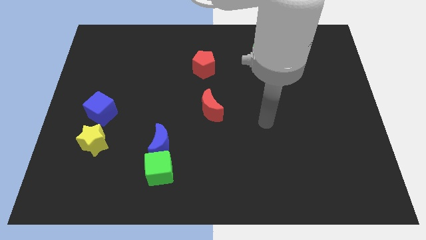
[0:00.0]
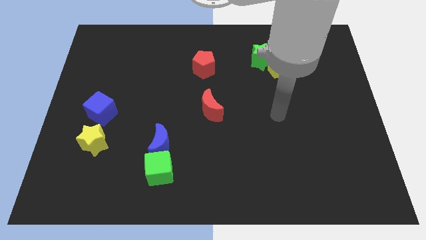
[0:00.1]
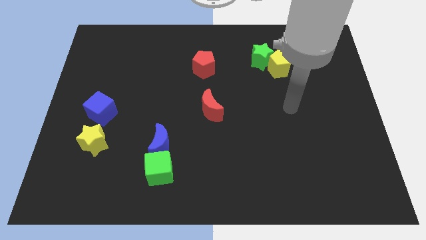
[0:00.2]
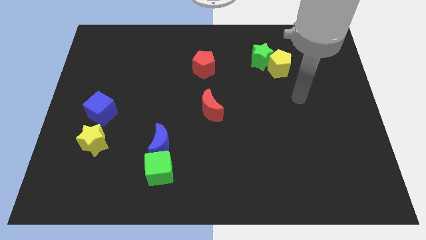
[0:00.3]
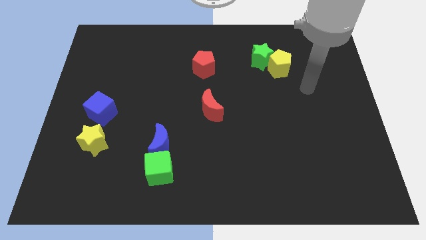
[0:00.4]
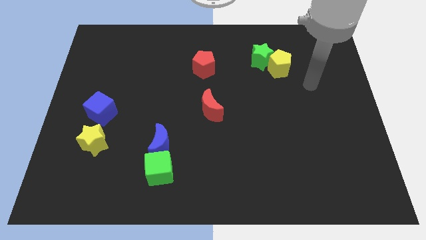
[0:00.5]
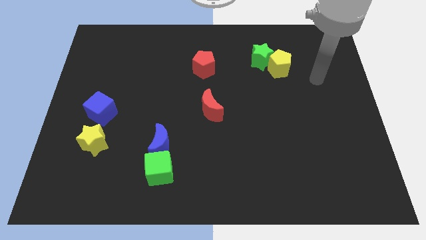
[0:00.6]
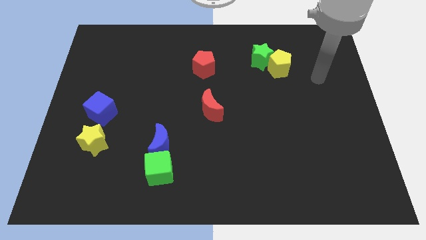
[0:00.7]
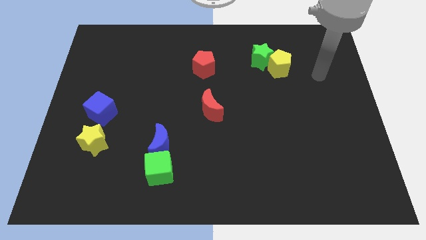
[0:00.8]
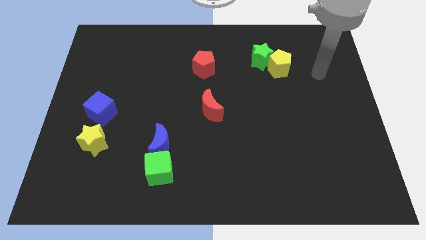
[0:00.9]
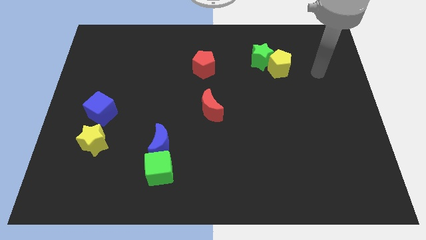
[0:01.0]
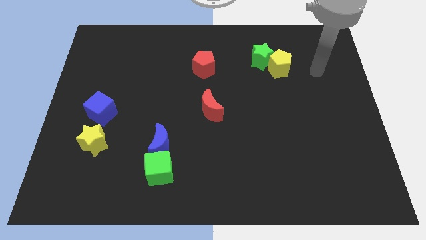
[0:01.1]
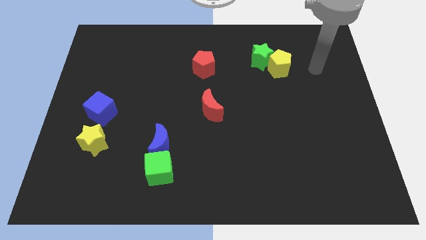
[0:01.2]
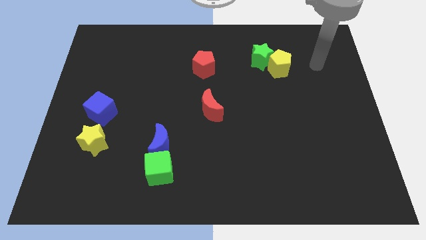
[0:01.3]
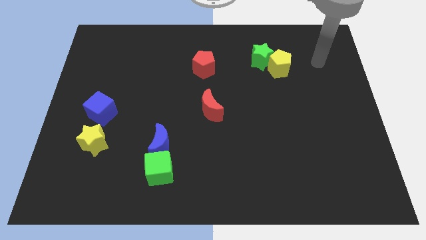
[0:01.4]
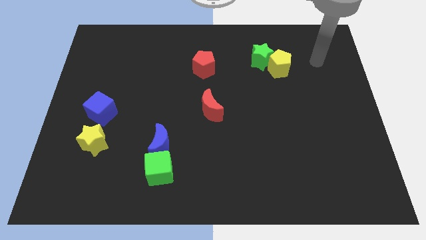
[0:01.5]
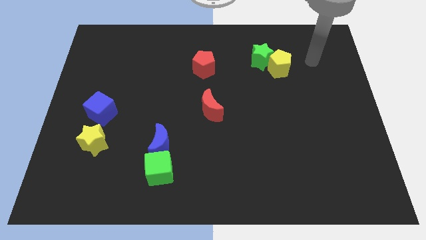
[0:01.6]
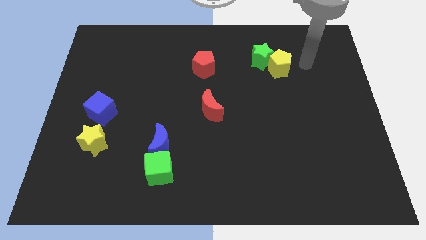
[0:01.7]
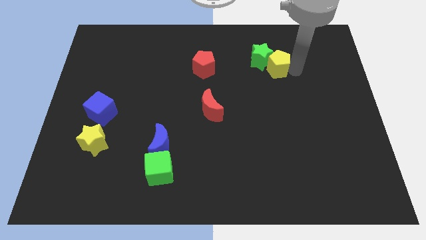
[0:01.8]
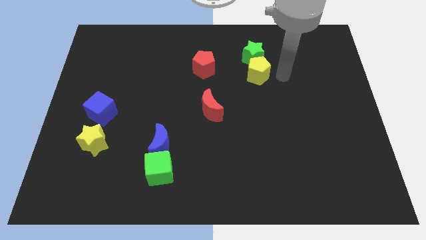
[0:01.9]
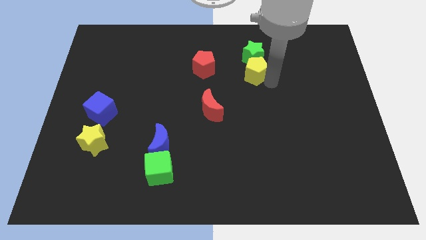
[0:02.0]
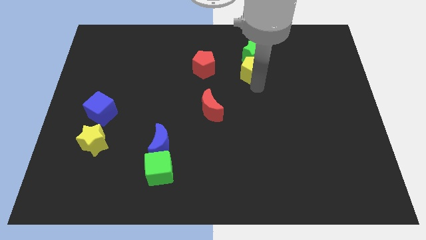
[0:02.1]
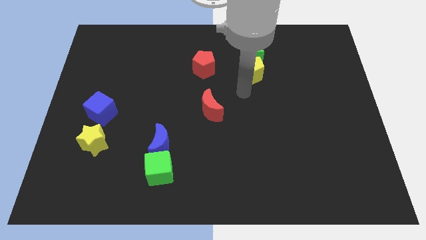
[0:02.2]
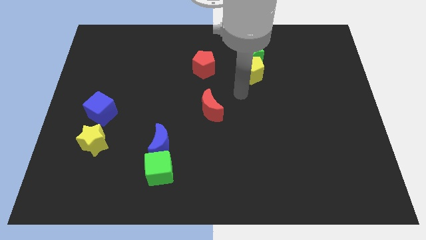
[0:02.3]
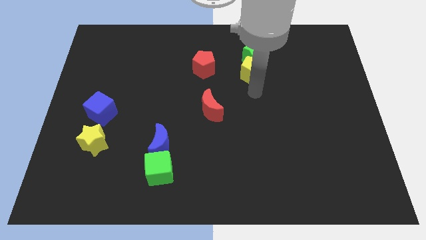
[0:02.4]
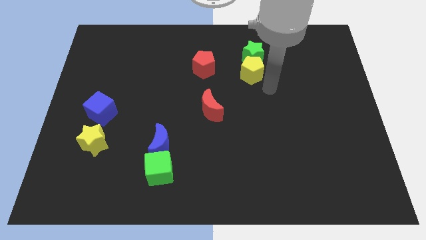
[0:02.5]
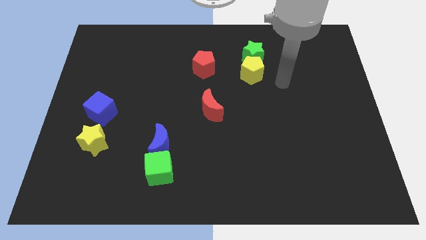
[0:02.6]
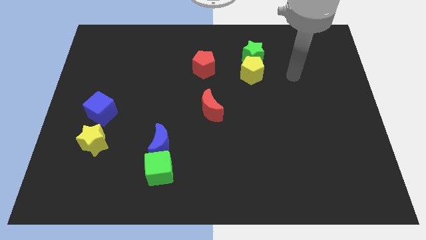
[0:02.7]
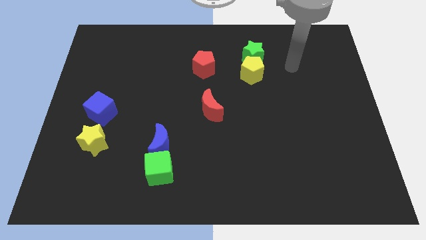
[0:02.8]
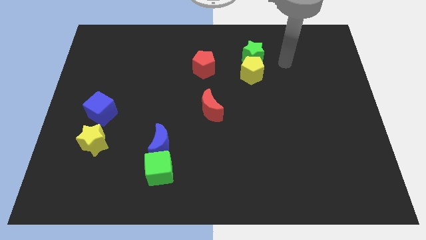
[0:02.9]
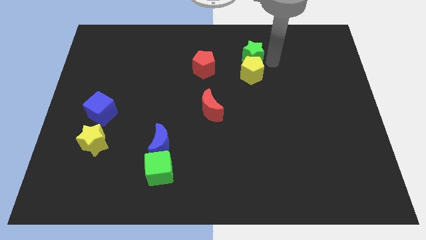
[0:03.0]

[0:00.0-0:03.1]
move the yellow pentagon below the green star

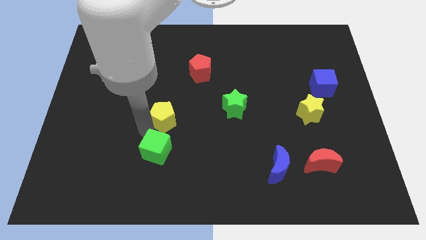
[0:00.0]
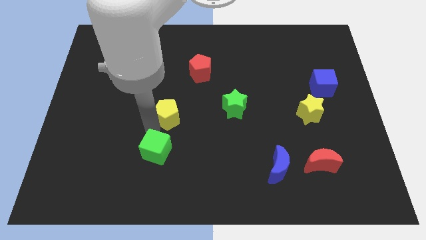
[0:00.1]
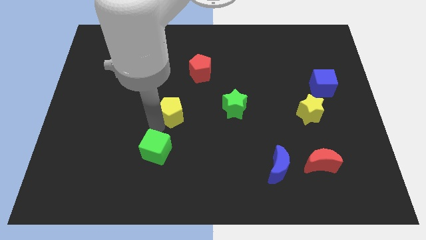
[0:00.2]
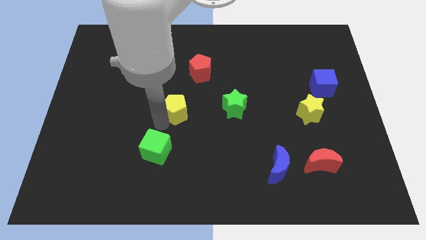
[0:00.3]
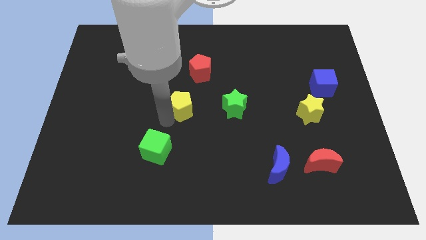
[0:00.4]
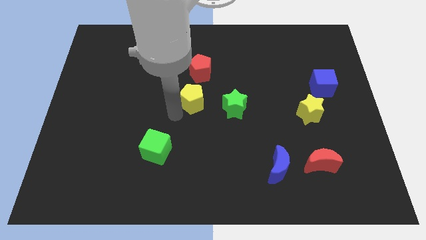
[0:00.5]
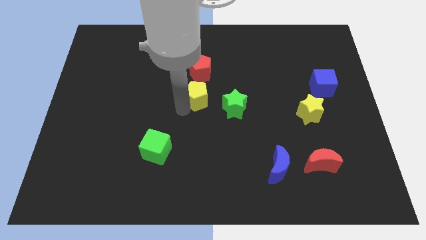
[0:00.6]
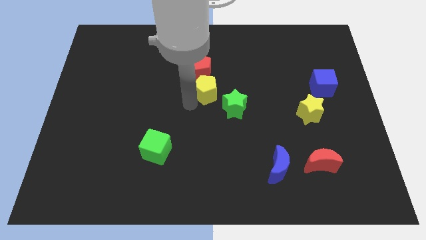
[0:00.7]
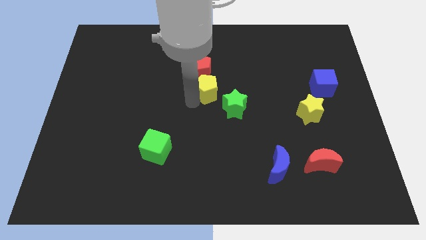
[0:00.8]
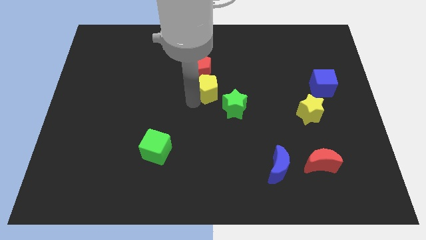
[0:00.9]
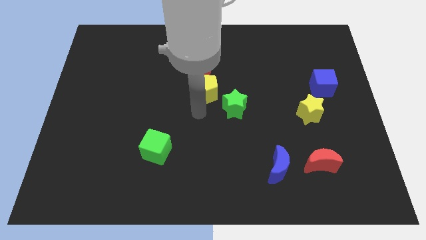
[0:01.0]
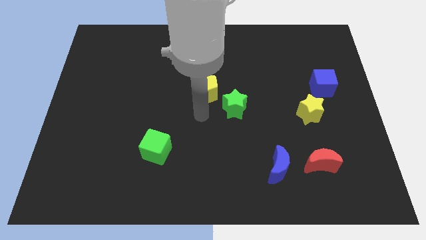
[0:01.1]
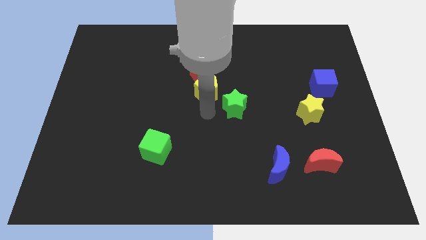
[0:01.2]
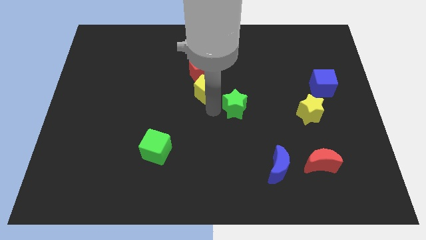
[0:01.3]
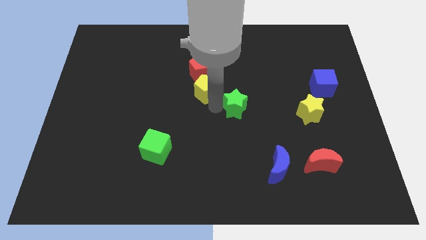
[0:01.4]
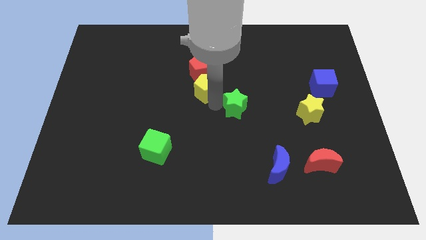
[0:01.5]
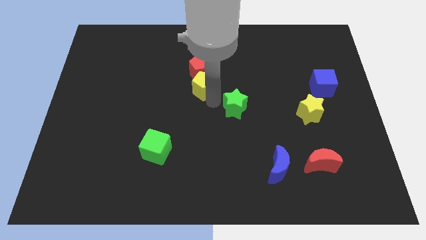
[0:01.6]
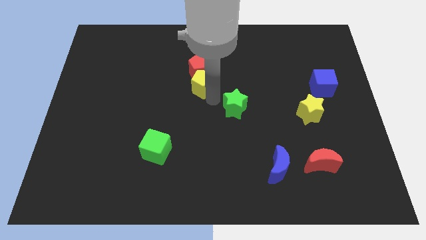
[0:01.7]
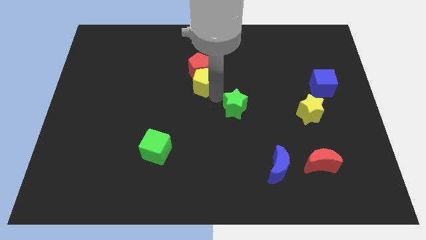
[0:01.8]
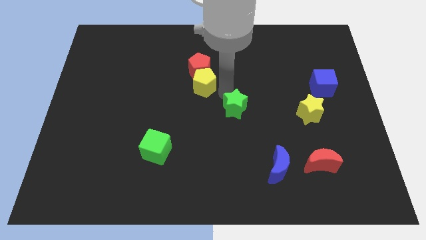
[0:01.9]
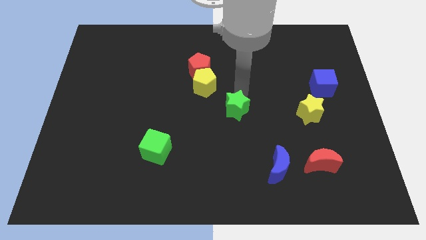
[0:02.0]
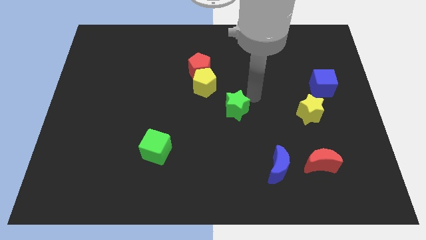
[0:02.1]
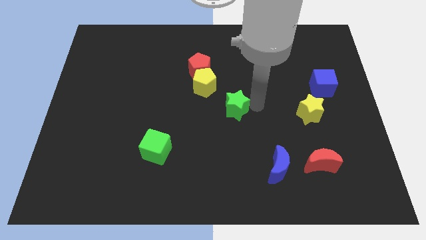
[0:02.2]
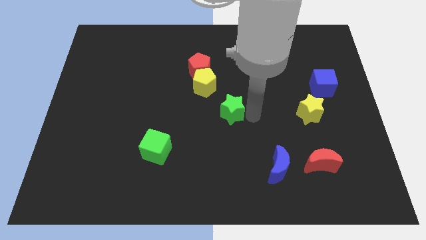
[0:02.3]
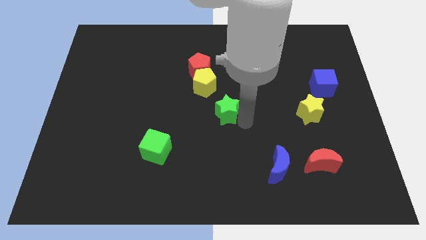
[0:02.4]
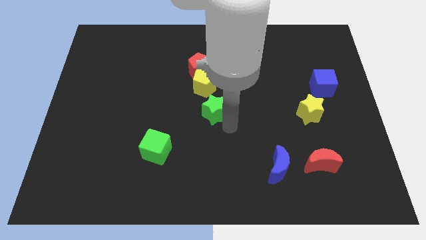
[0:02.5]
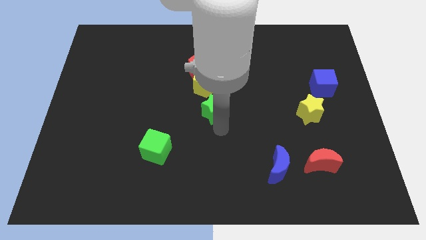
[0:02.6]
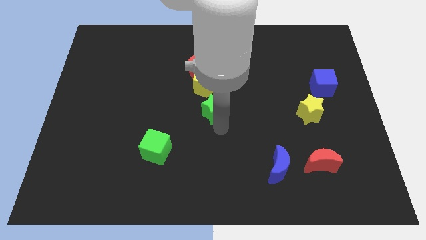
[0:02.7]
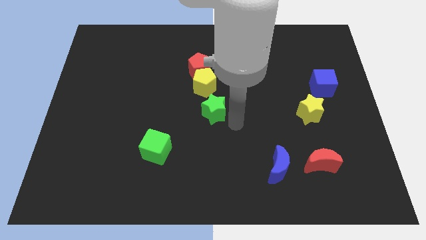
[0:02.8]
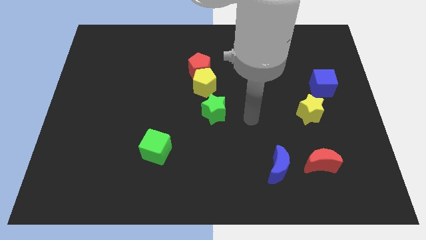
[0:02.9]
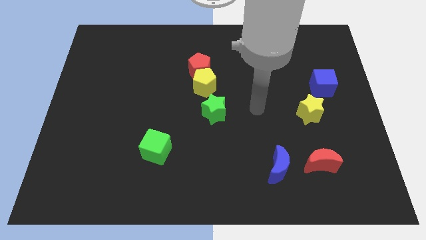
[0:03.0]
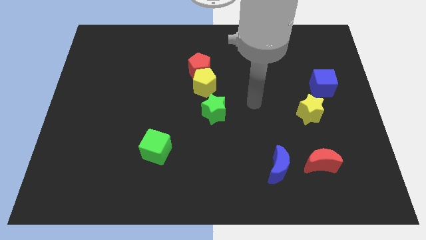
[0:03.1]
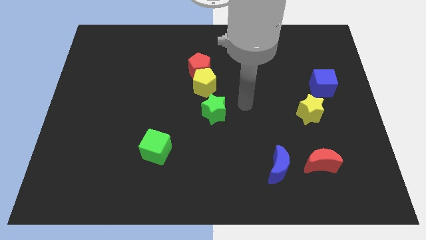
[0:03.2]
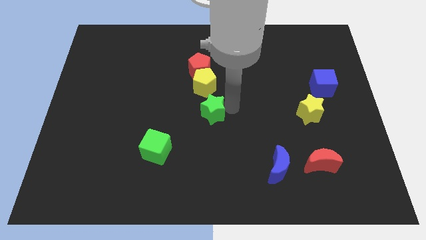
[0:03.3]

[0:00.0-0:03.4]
slide the yellow pentagon and green start diagonally to the bottom right side of the red pentagon

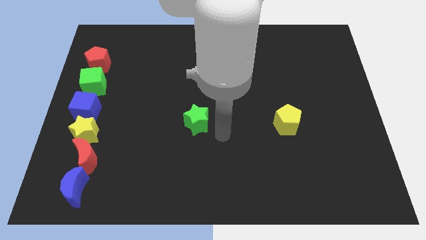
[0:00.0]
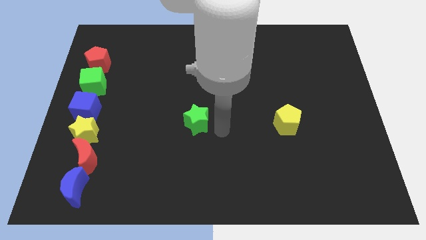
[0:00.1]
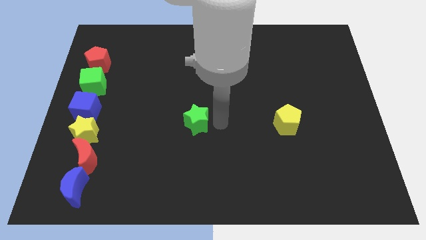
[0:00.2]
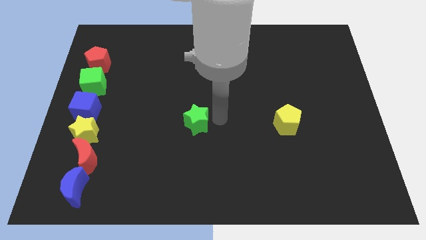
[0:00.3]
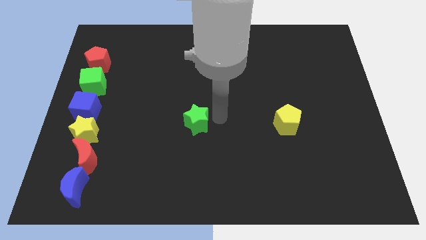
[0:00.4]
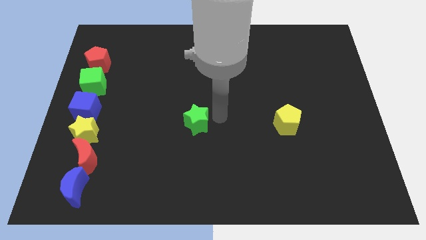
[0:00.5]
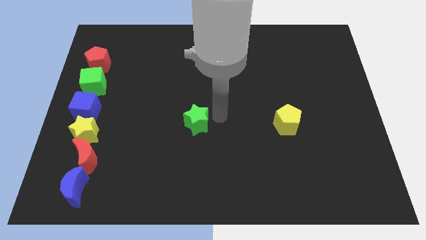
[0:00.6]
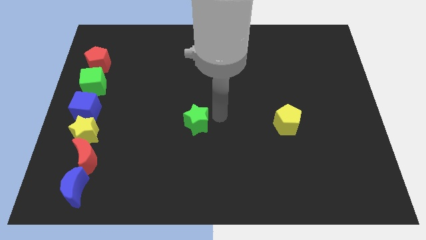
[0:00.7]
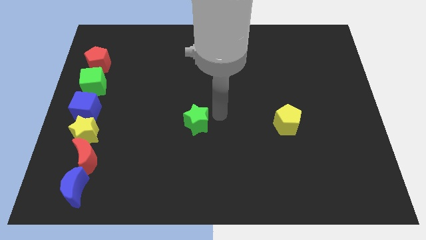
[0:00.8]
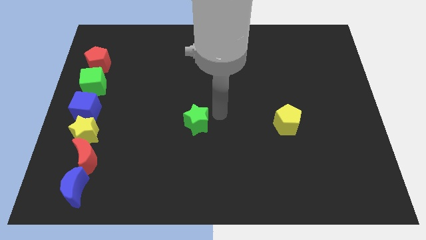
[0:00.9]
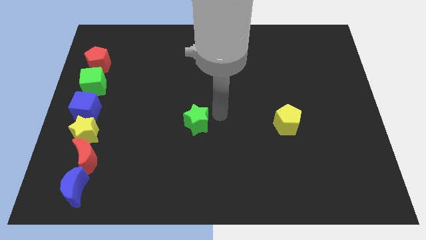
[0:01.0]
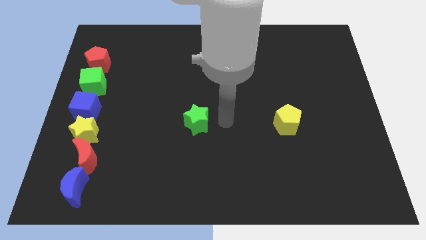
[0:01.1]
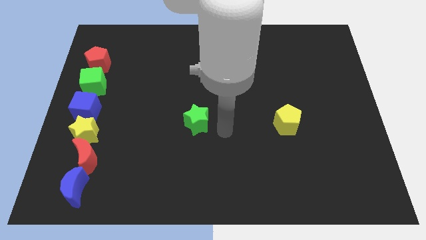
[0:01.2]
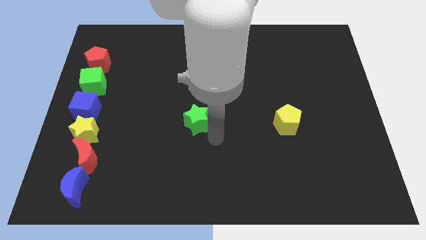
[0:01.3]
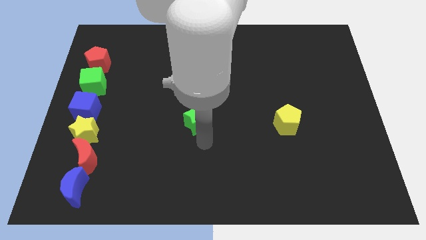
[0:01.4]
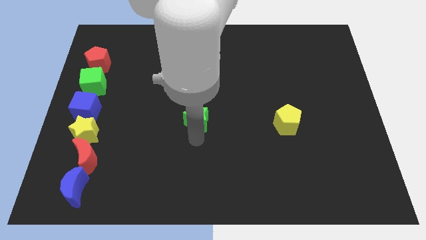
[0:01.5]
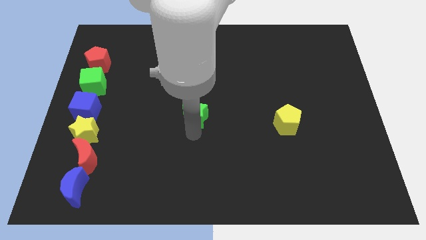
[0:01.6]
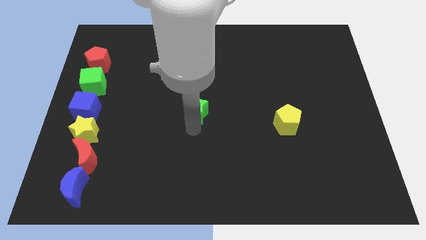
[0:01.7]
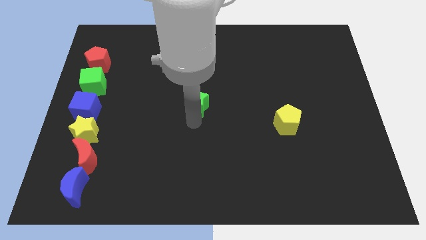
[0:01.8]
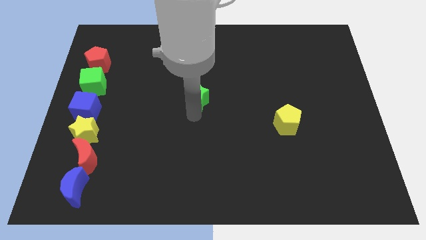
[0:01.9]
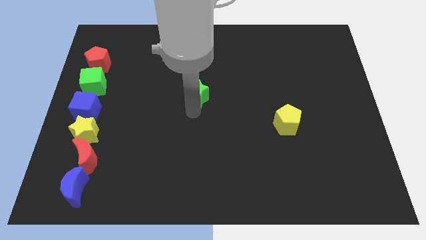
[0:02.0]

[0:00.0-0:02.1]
push the green star to the center of the board

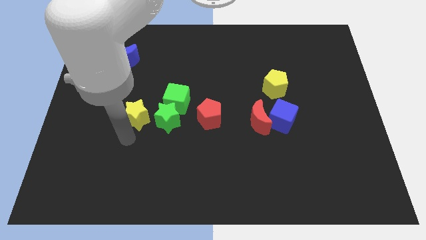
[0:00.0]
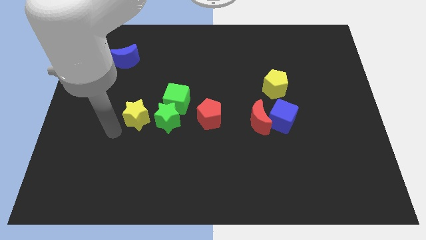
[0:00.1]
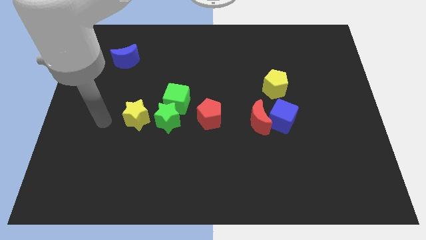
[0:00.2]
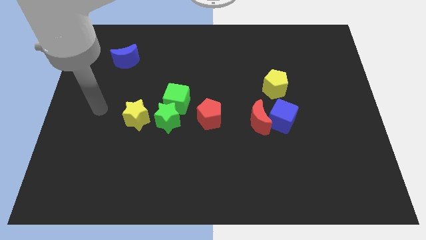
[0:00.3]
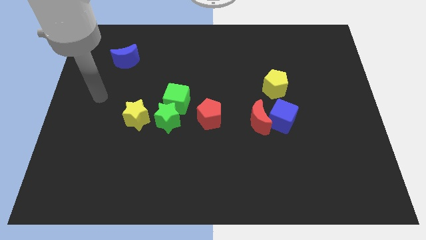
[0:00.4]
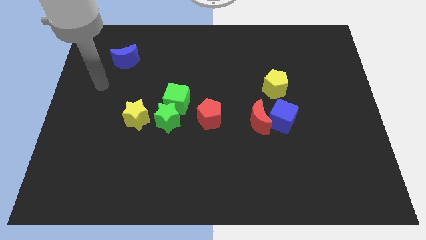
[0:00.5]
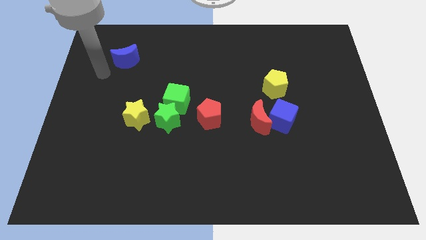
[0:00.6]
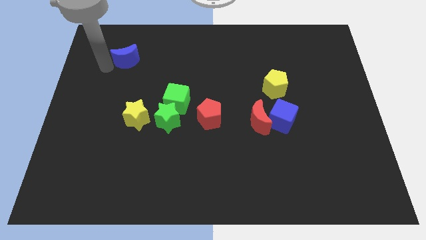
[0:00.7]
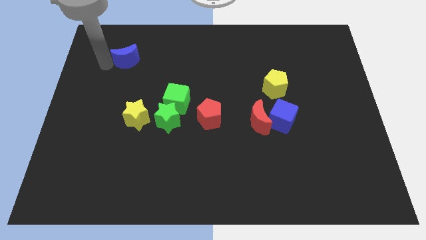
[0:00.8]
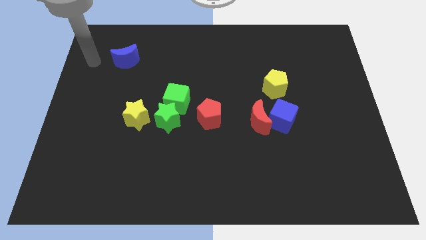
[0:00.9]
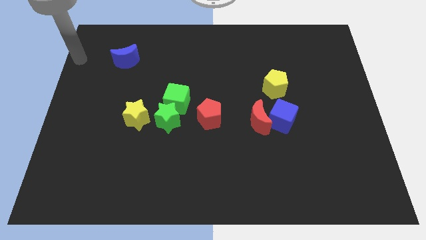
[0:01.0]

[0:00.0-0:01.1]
move your arm to the left of blue moon
